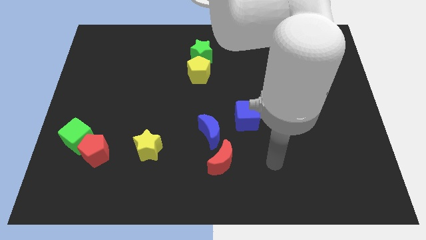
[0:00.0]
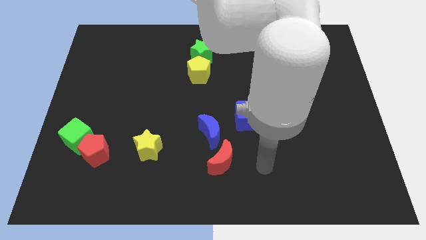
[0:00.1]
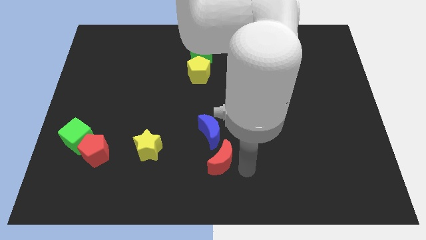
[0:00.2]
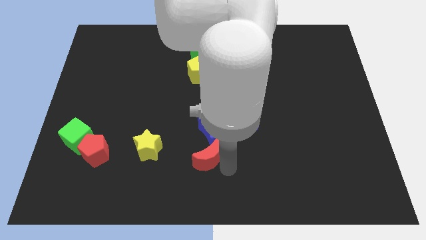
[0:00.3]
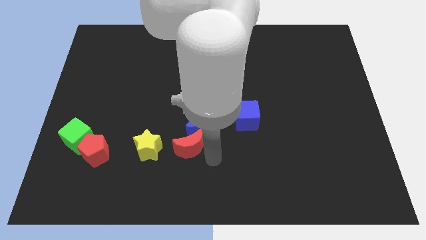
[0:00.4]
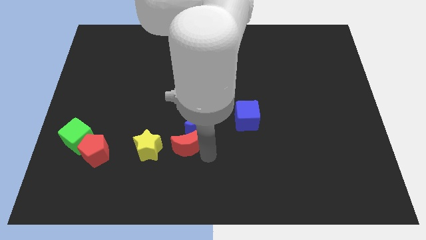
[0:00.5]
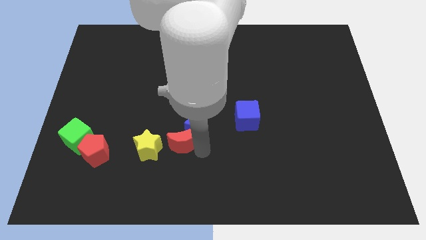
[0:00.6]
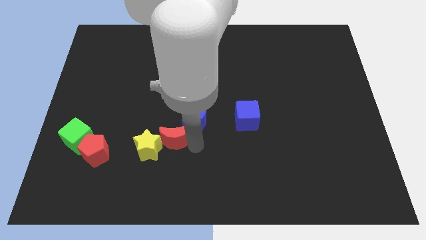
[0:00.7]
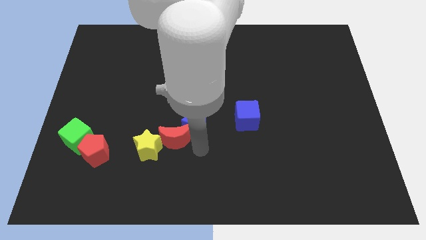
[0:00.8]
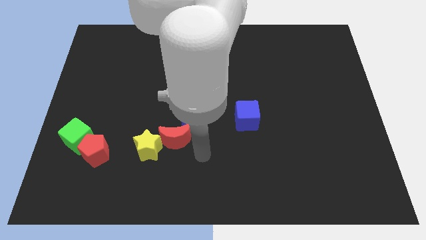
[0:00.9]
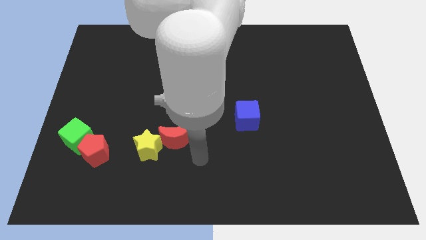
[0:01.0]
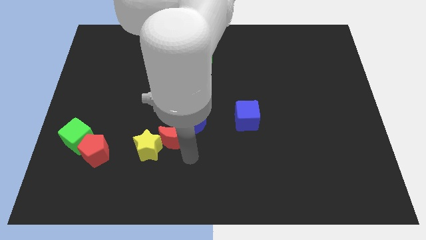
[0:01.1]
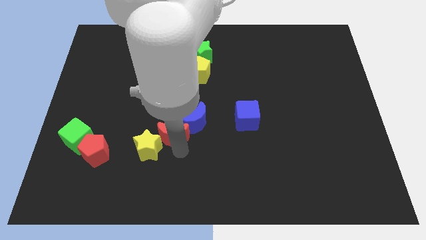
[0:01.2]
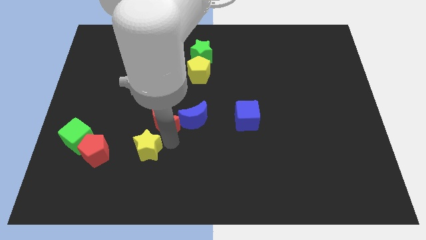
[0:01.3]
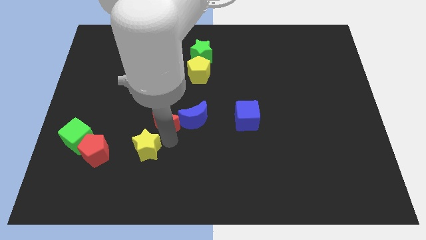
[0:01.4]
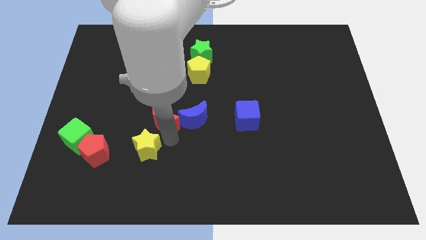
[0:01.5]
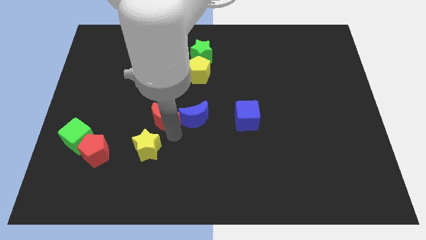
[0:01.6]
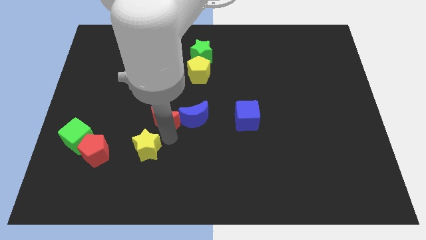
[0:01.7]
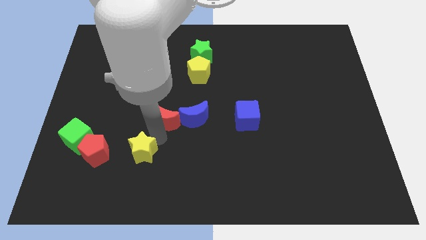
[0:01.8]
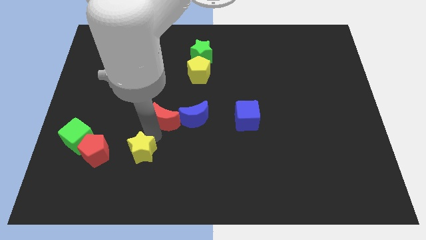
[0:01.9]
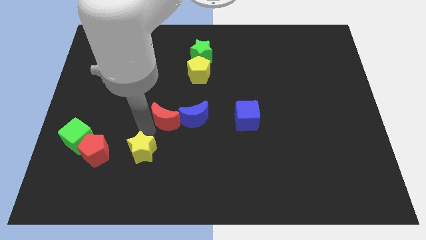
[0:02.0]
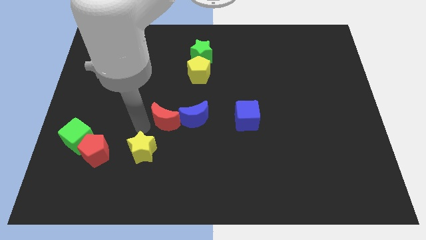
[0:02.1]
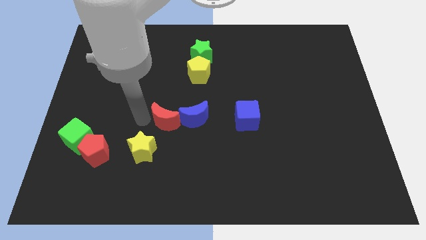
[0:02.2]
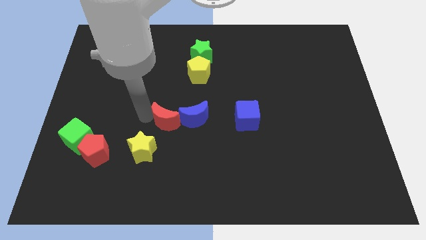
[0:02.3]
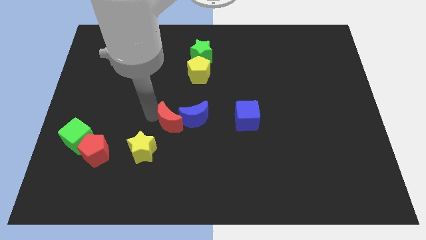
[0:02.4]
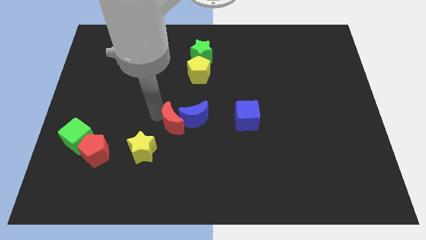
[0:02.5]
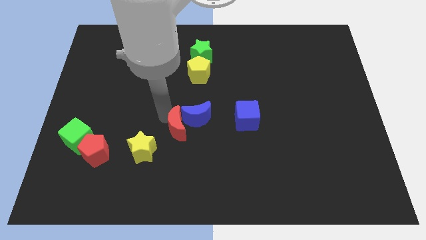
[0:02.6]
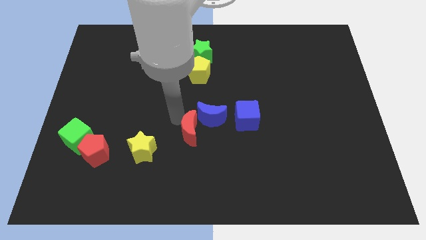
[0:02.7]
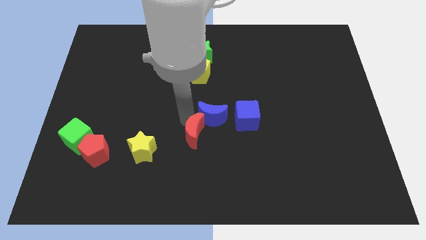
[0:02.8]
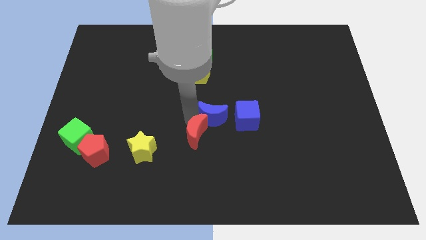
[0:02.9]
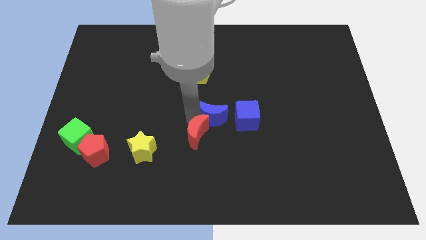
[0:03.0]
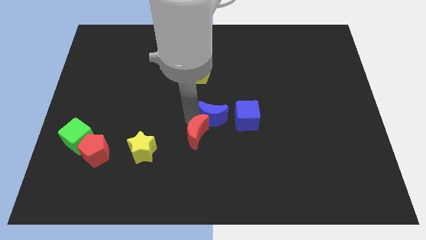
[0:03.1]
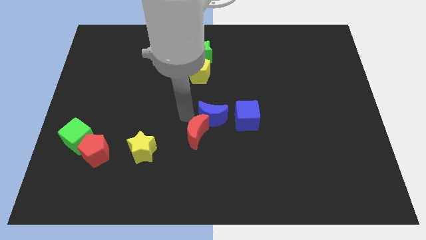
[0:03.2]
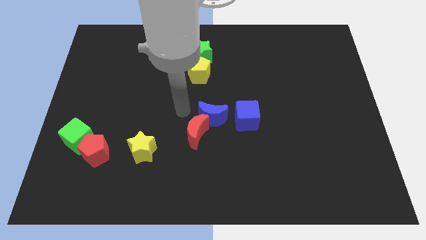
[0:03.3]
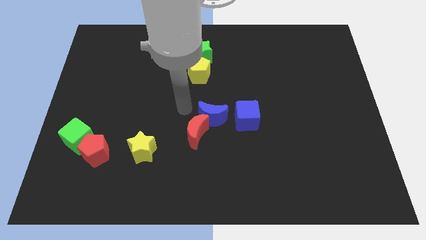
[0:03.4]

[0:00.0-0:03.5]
move the red crescent left to the blue crescent

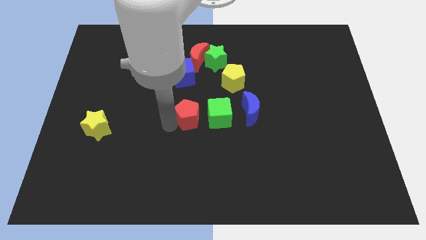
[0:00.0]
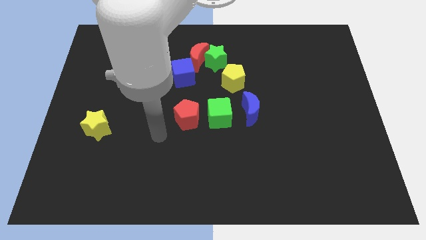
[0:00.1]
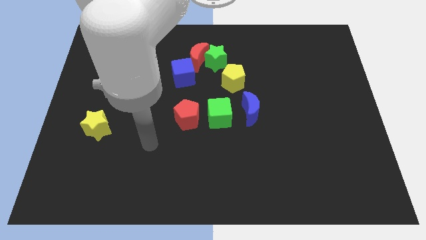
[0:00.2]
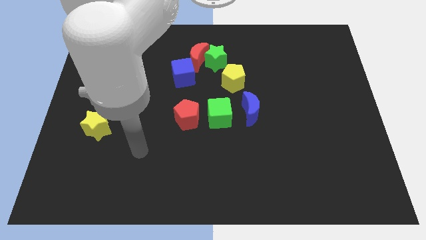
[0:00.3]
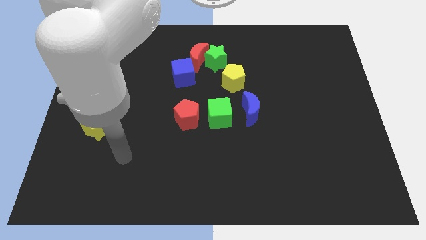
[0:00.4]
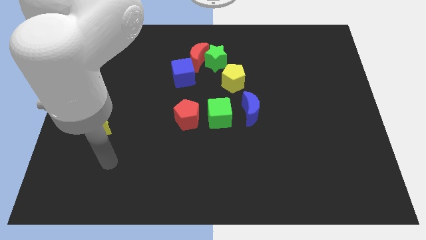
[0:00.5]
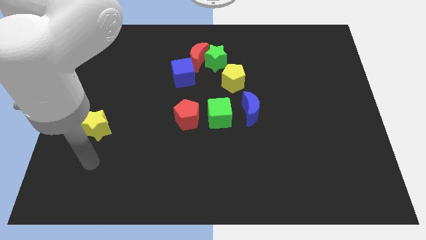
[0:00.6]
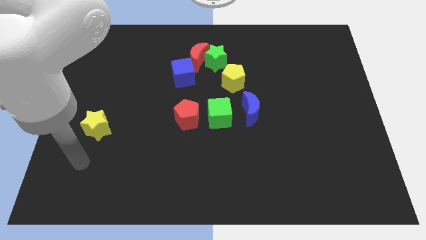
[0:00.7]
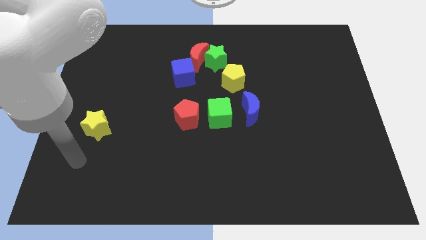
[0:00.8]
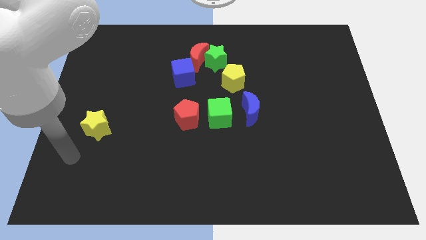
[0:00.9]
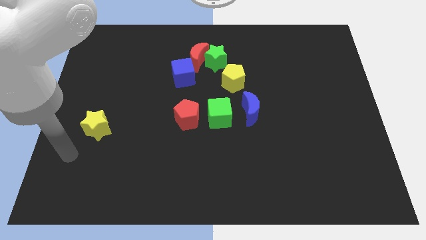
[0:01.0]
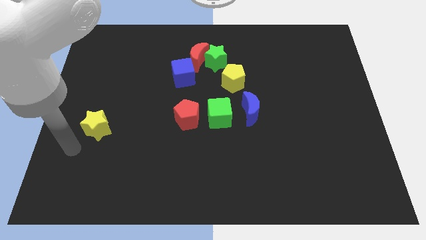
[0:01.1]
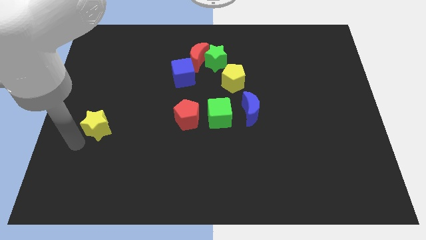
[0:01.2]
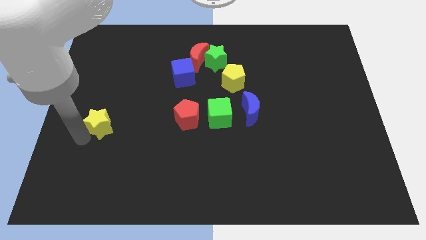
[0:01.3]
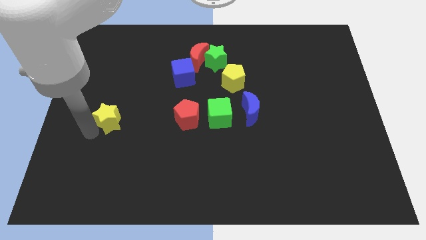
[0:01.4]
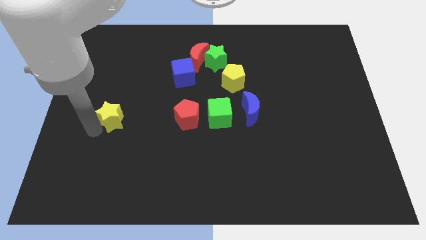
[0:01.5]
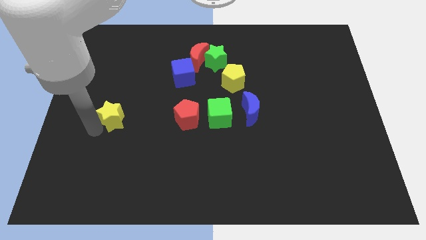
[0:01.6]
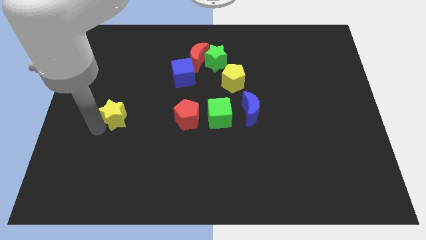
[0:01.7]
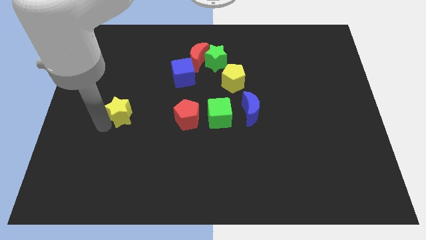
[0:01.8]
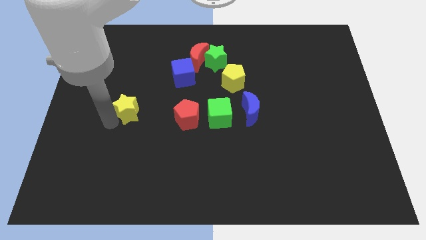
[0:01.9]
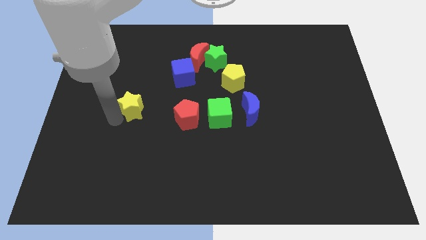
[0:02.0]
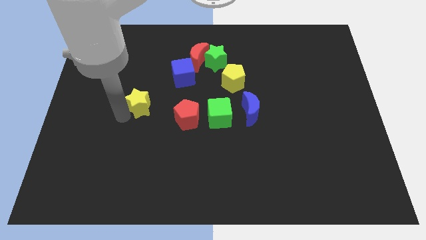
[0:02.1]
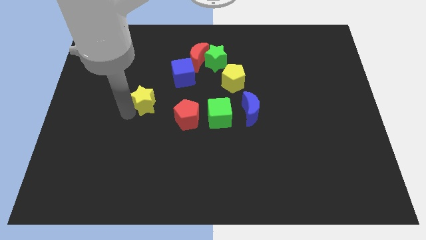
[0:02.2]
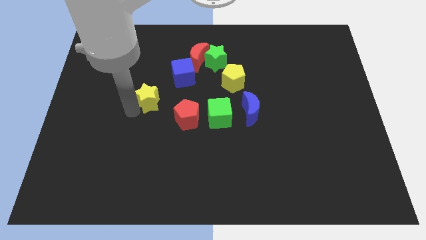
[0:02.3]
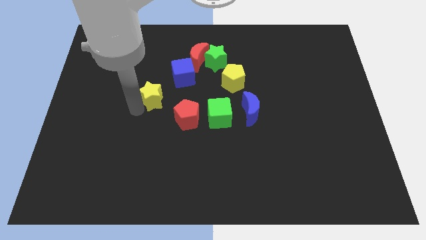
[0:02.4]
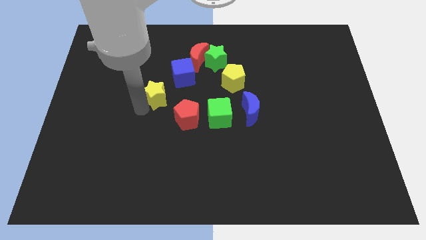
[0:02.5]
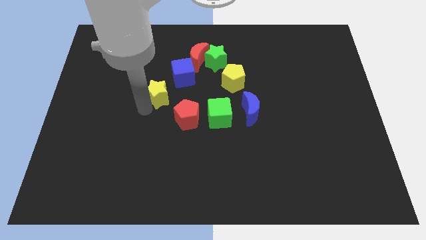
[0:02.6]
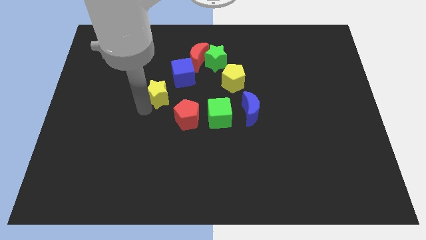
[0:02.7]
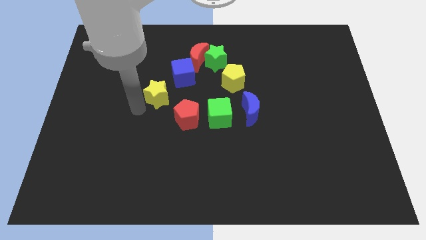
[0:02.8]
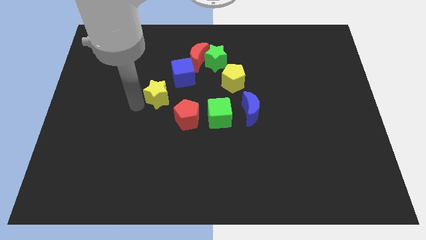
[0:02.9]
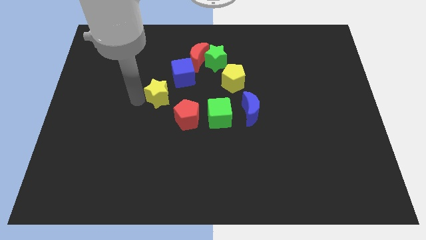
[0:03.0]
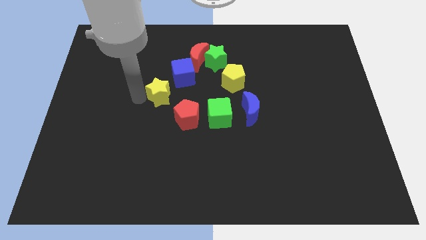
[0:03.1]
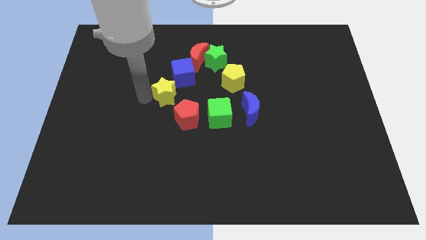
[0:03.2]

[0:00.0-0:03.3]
place yellow star diagonally towards red pentagon

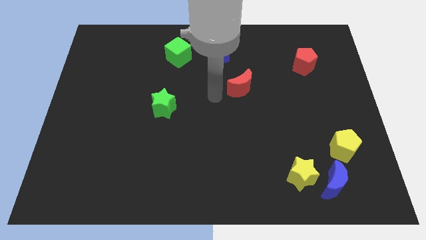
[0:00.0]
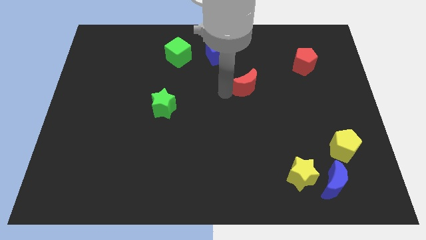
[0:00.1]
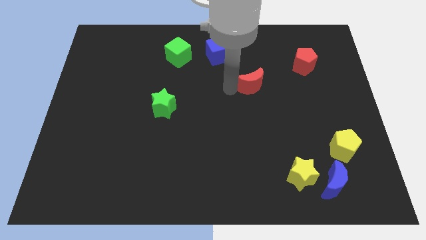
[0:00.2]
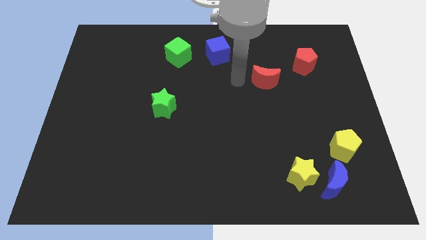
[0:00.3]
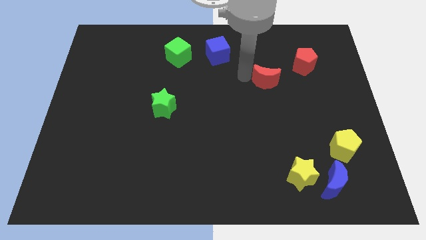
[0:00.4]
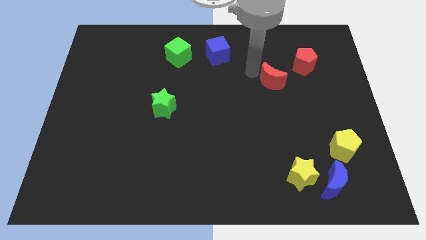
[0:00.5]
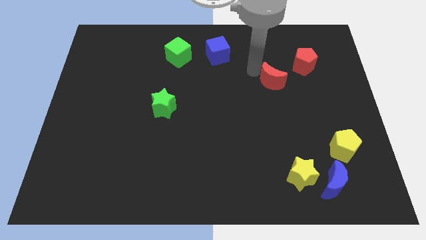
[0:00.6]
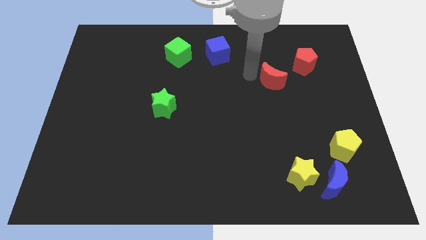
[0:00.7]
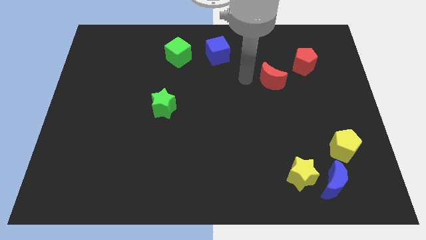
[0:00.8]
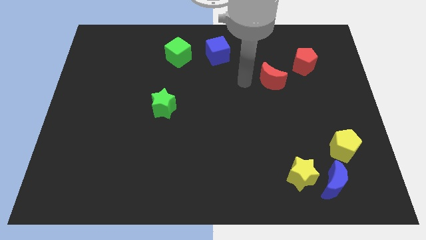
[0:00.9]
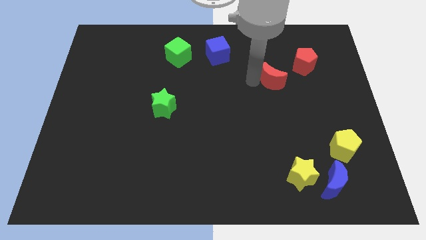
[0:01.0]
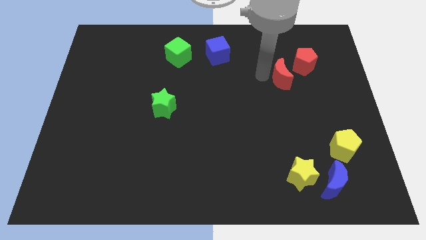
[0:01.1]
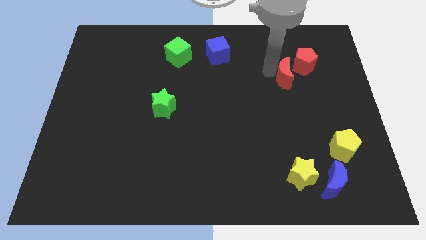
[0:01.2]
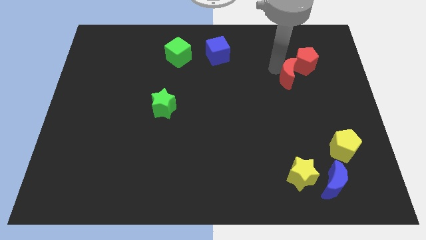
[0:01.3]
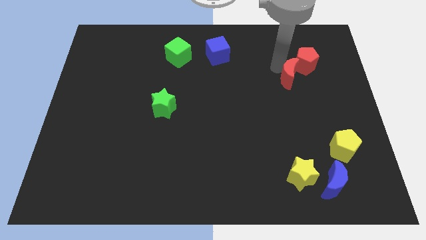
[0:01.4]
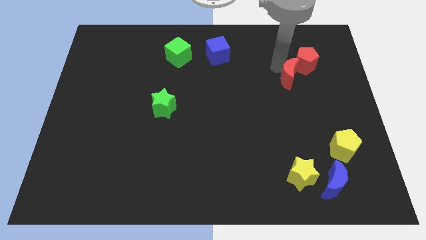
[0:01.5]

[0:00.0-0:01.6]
make the red crescent to touch the left side of the red pentagon

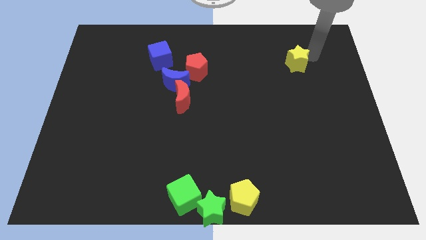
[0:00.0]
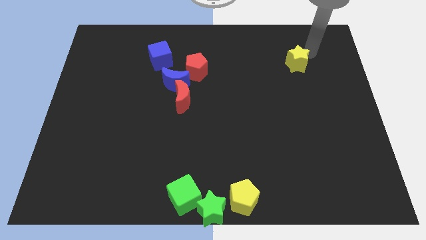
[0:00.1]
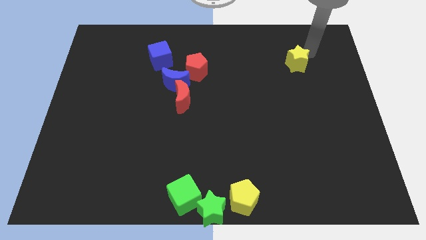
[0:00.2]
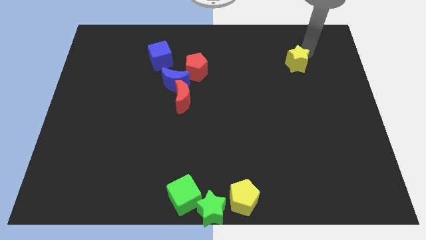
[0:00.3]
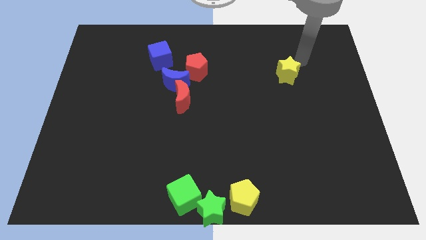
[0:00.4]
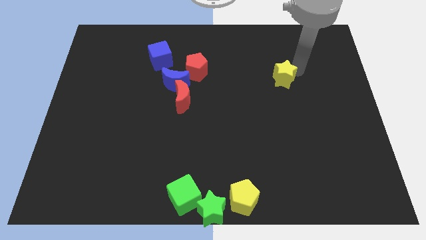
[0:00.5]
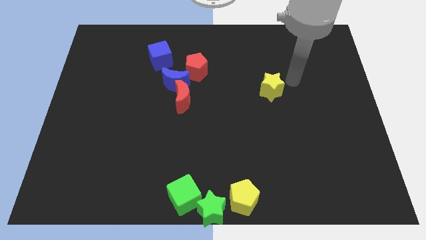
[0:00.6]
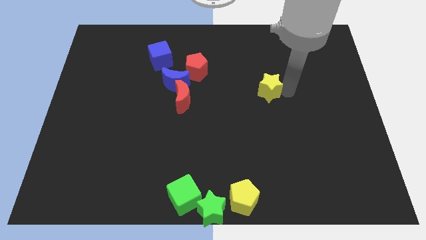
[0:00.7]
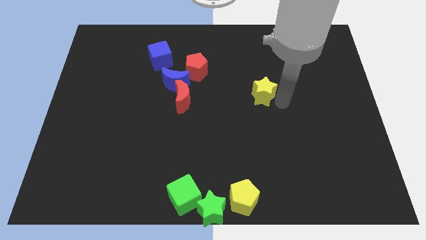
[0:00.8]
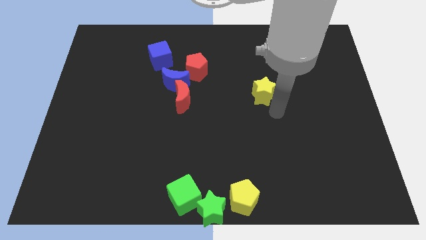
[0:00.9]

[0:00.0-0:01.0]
push the yellow star to the right of the red crescent
